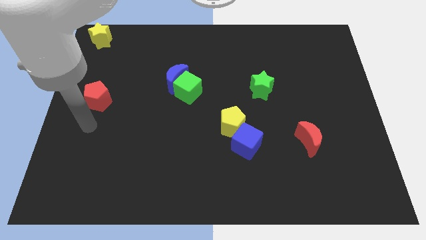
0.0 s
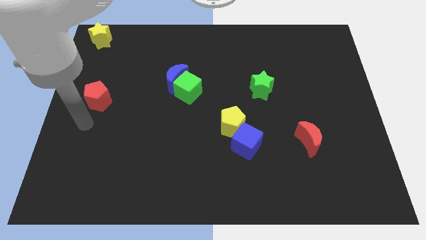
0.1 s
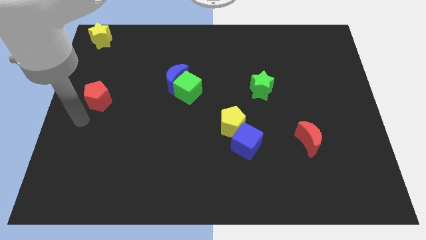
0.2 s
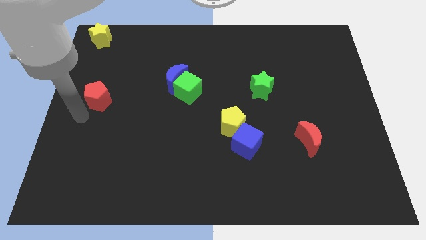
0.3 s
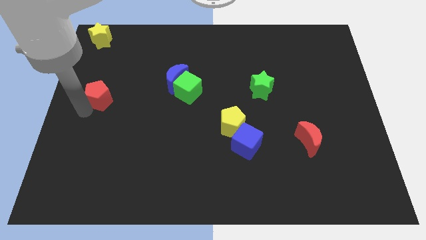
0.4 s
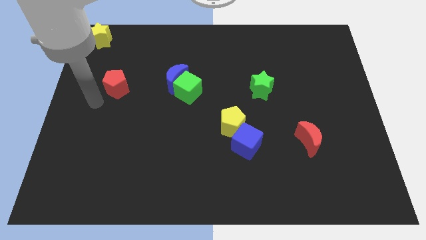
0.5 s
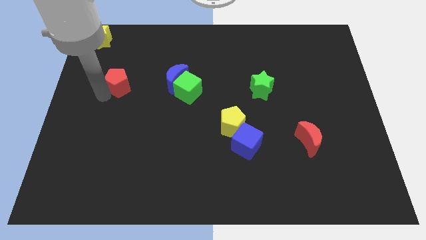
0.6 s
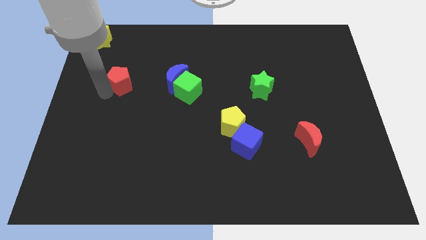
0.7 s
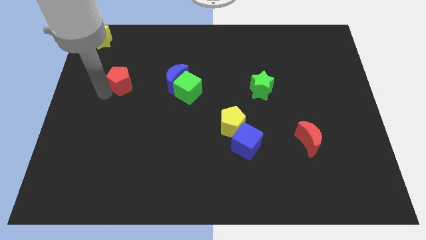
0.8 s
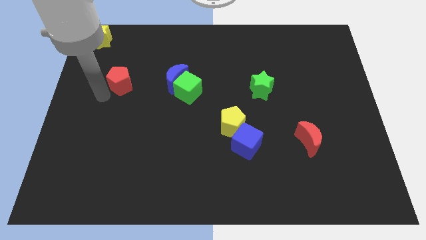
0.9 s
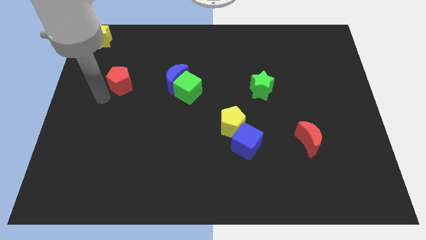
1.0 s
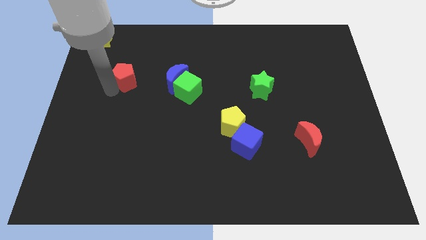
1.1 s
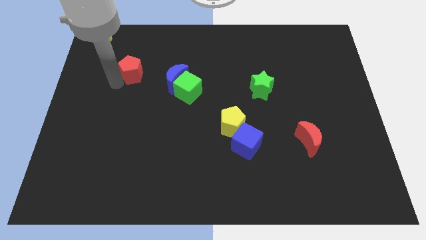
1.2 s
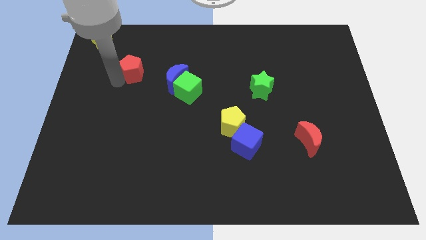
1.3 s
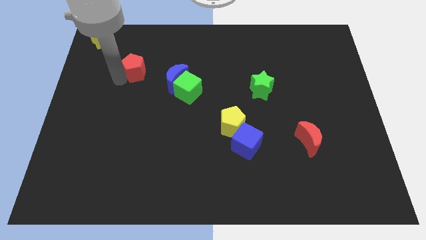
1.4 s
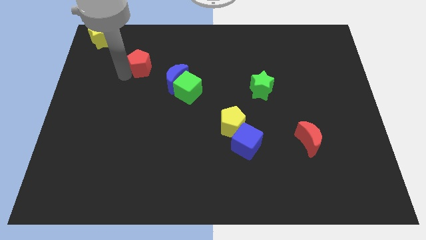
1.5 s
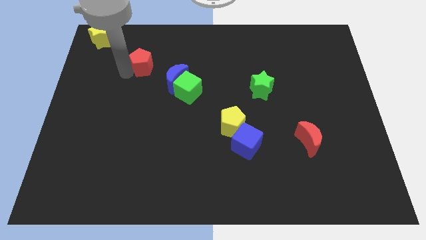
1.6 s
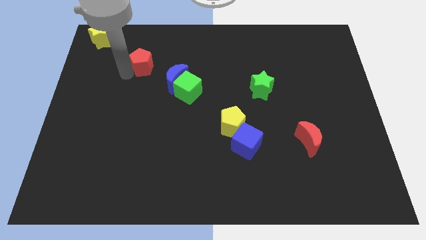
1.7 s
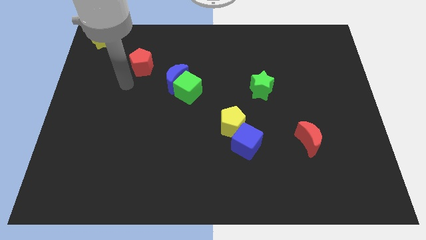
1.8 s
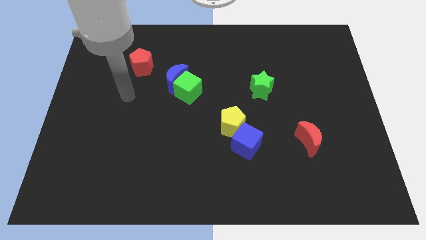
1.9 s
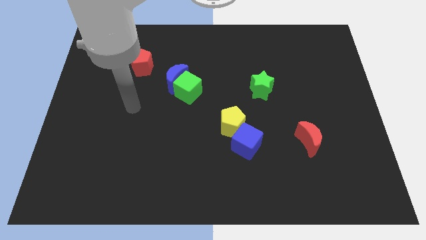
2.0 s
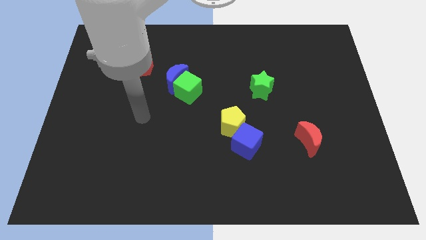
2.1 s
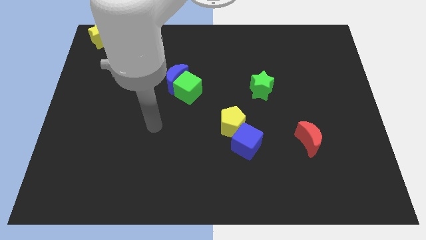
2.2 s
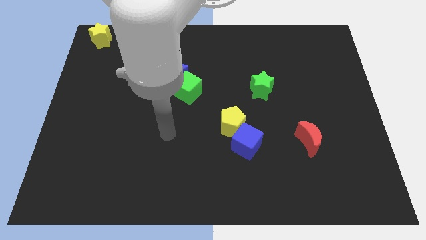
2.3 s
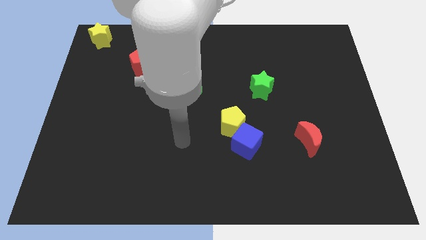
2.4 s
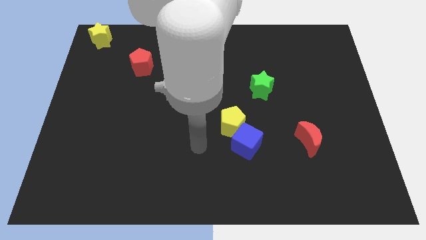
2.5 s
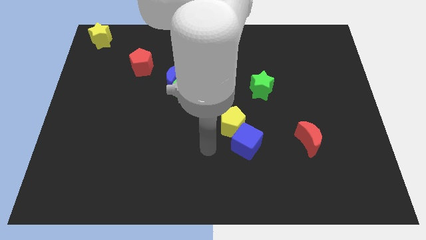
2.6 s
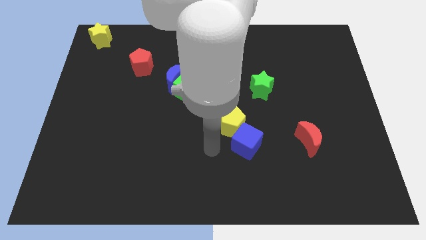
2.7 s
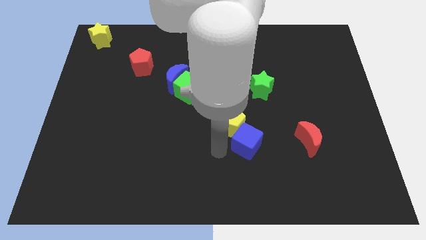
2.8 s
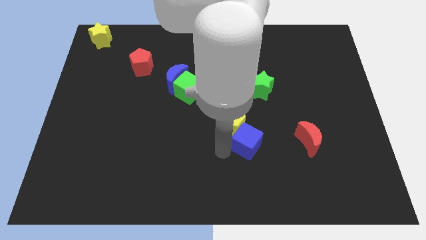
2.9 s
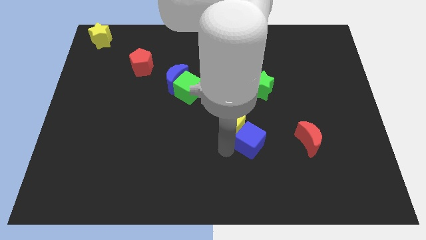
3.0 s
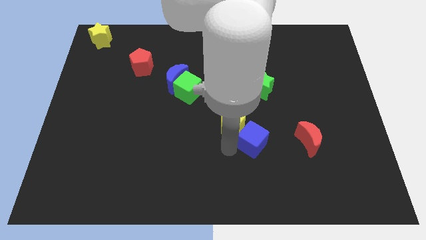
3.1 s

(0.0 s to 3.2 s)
drag the red pentagon diagonally top left to the blue moon

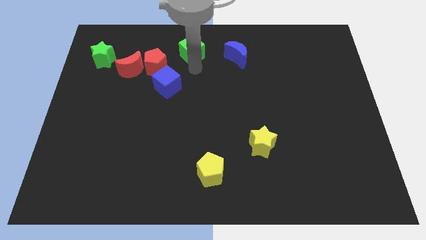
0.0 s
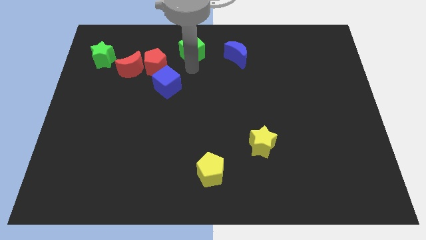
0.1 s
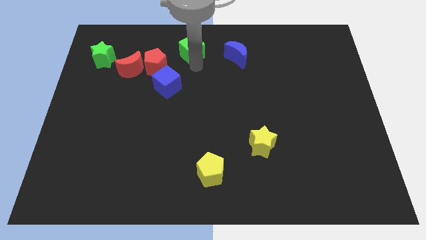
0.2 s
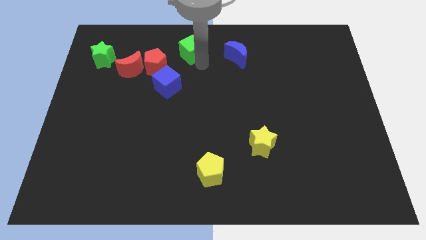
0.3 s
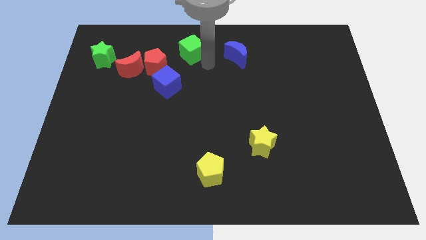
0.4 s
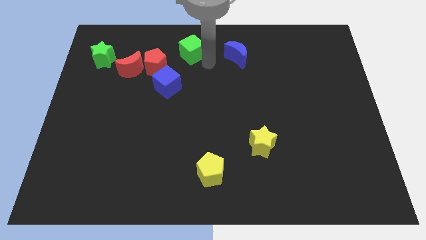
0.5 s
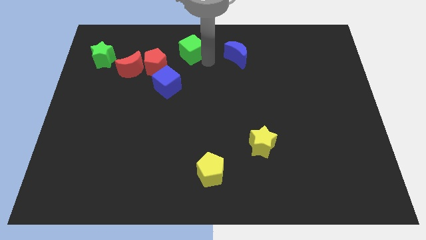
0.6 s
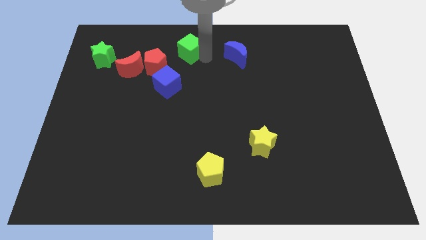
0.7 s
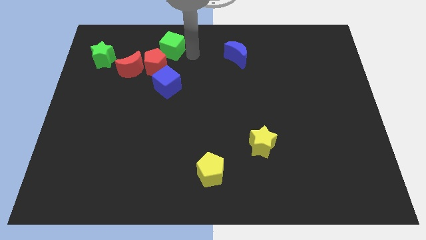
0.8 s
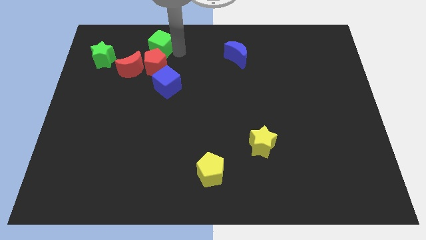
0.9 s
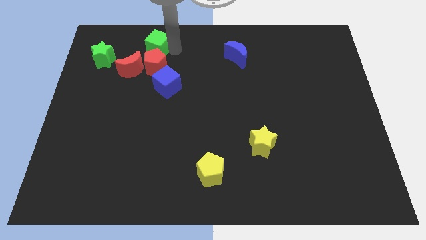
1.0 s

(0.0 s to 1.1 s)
put the green cube above the red pentagon

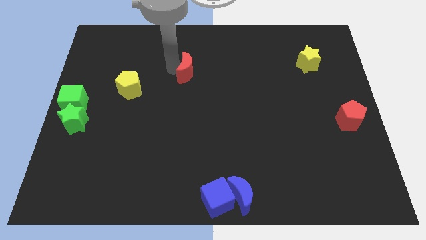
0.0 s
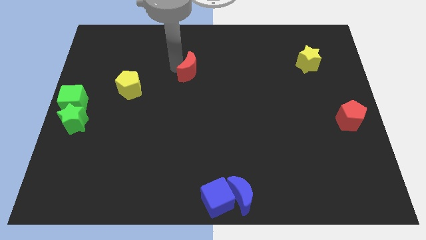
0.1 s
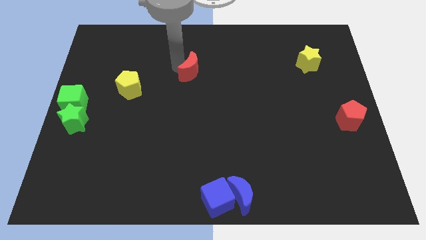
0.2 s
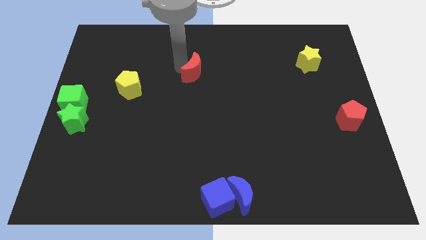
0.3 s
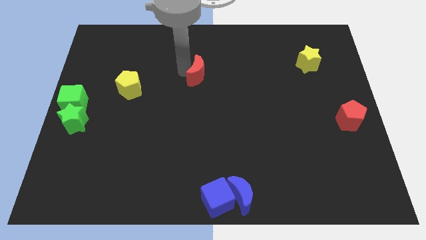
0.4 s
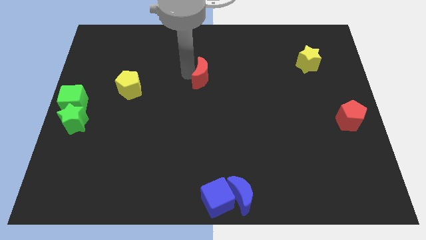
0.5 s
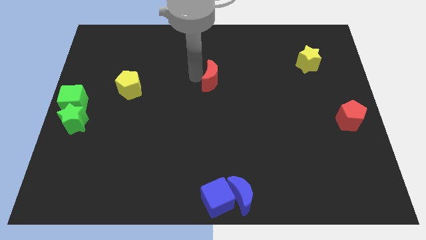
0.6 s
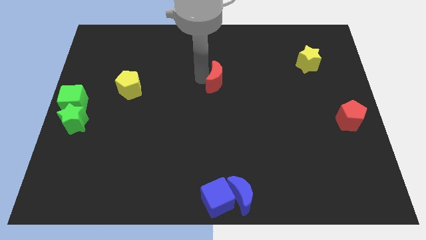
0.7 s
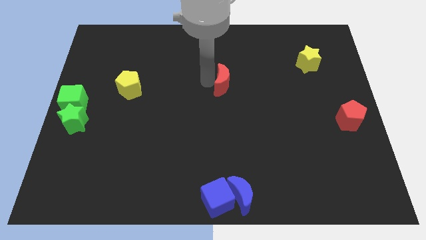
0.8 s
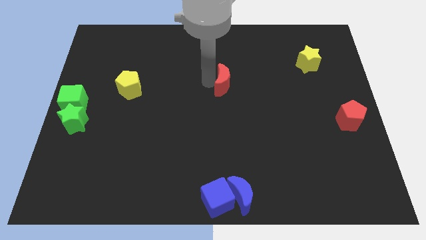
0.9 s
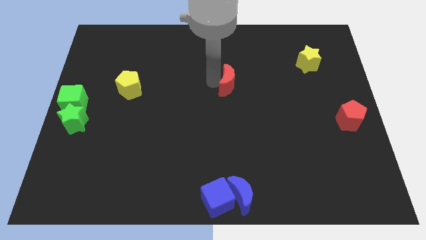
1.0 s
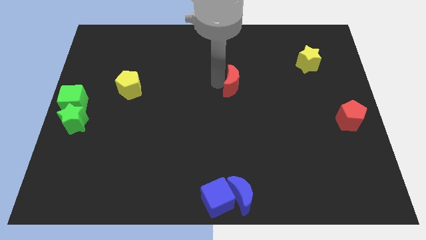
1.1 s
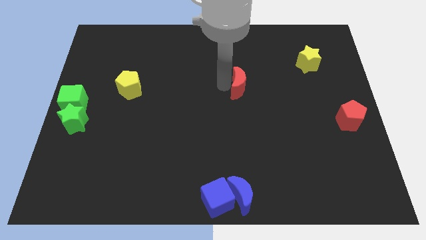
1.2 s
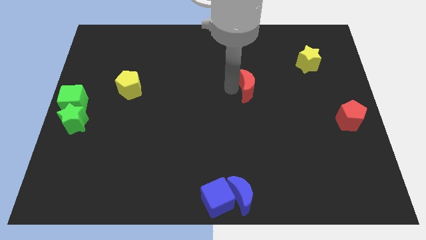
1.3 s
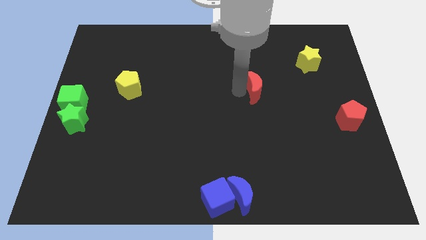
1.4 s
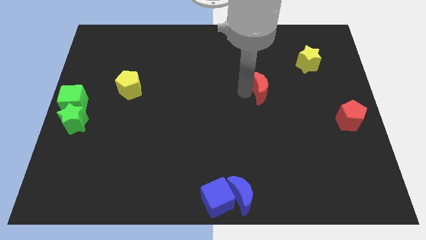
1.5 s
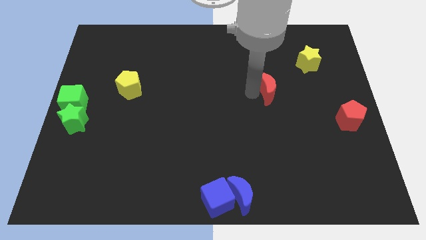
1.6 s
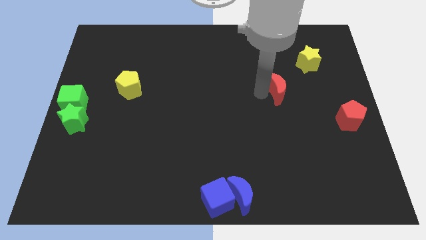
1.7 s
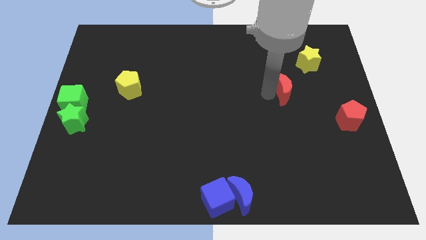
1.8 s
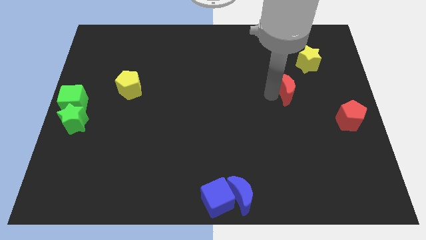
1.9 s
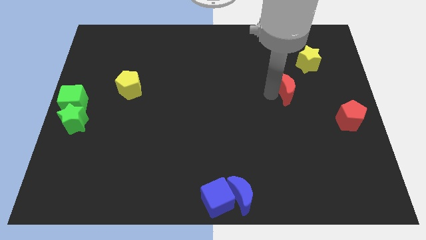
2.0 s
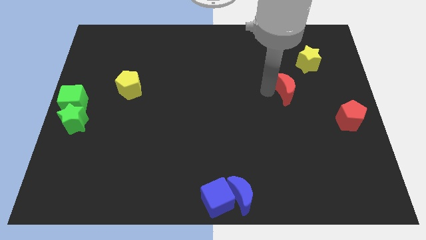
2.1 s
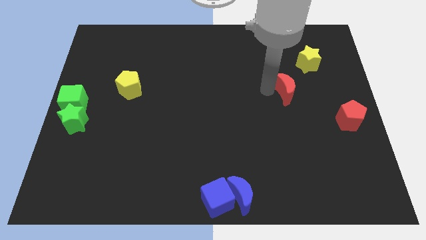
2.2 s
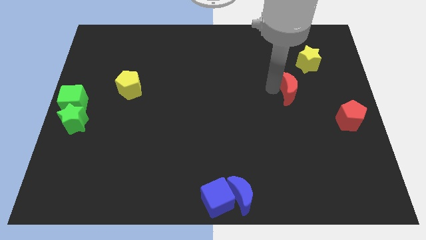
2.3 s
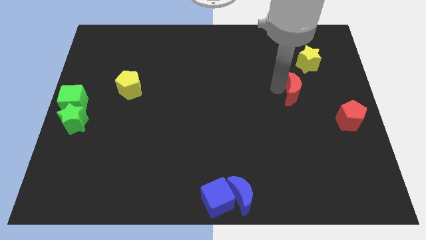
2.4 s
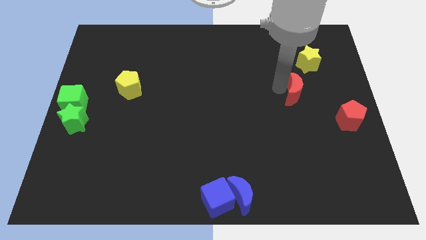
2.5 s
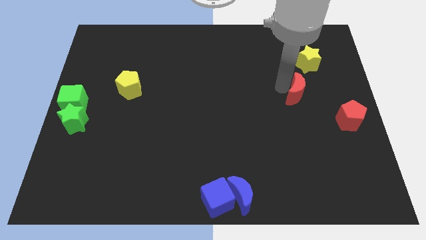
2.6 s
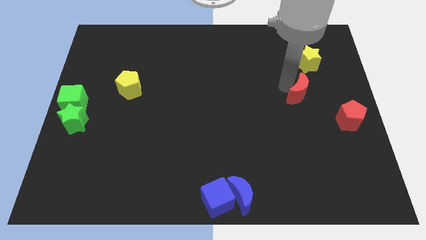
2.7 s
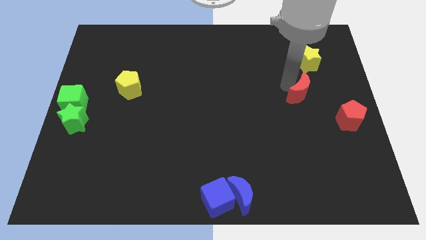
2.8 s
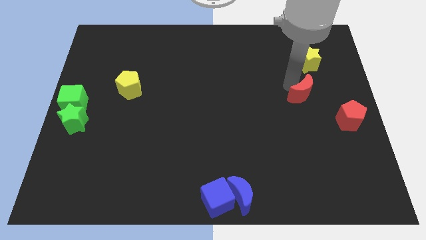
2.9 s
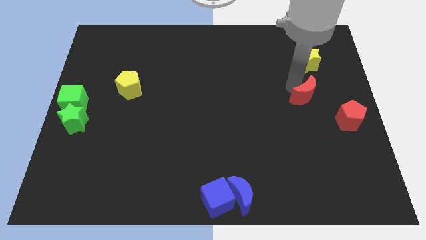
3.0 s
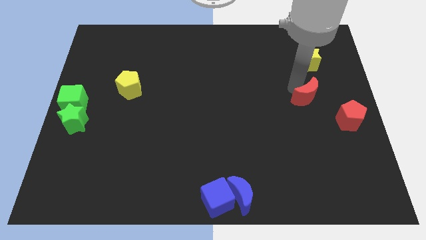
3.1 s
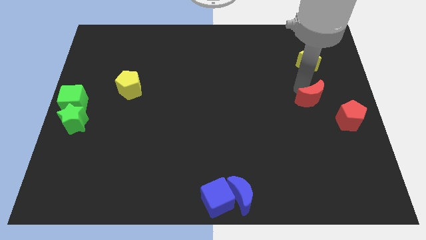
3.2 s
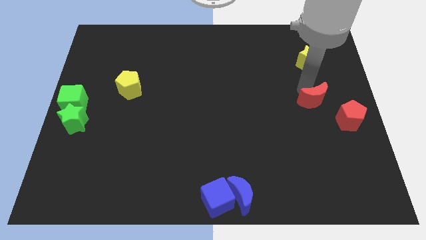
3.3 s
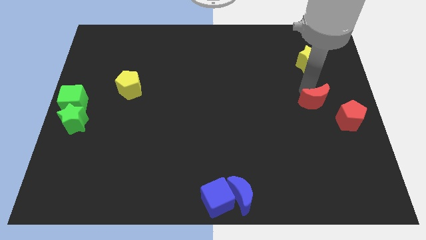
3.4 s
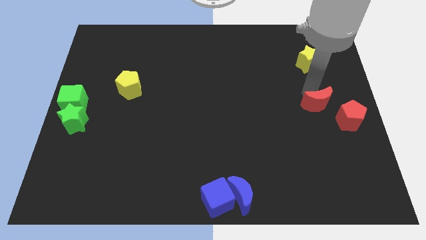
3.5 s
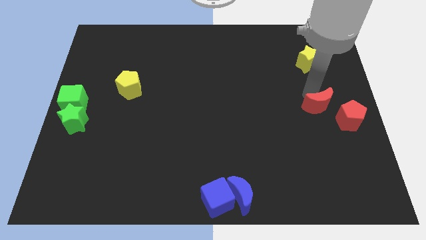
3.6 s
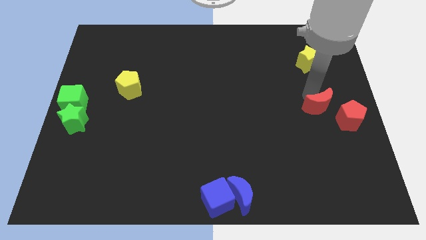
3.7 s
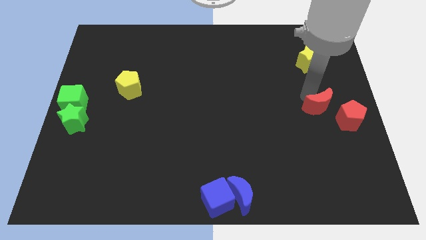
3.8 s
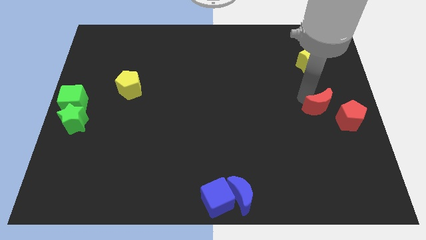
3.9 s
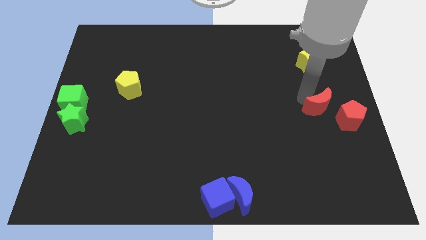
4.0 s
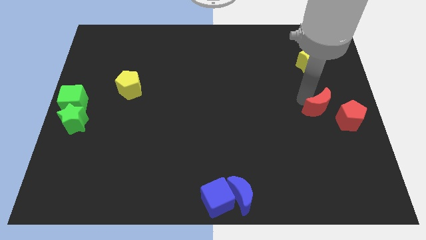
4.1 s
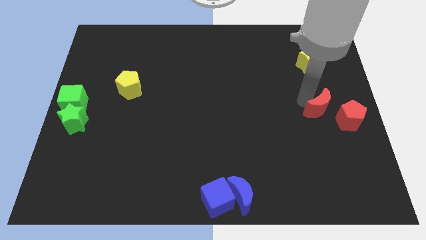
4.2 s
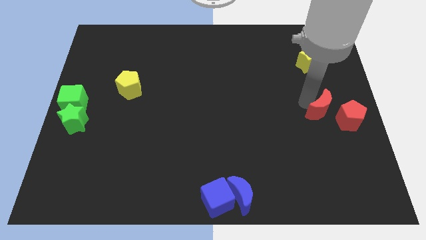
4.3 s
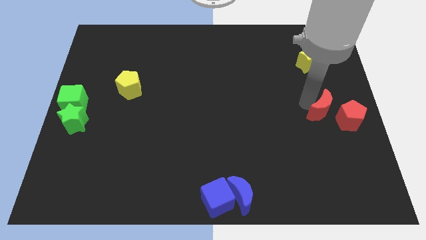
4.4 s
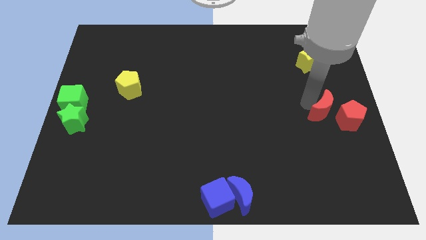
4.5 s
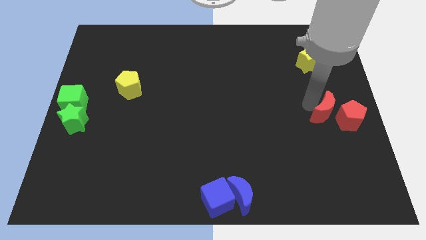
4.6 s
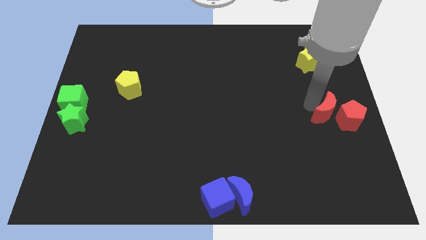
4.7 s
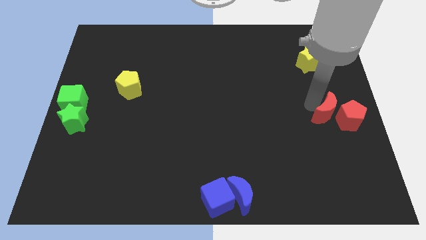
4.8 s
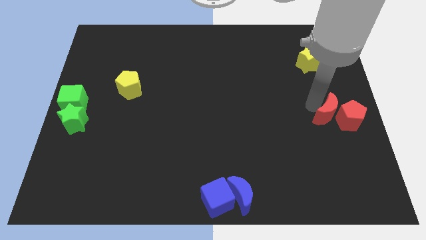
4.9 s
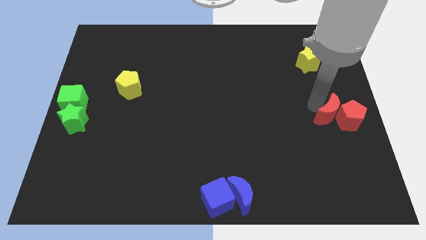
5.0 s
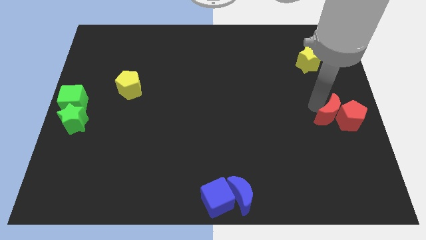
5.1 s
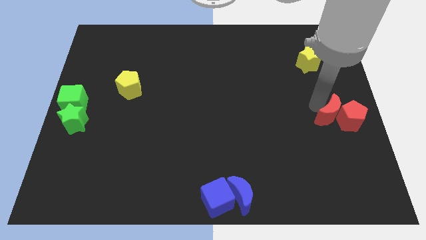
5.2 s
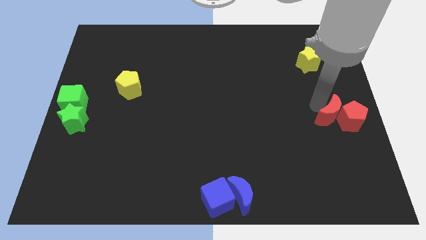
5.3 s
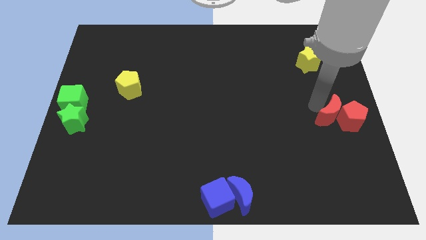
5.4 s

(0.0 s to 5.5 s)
place red crescent on the left side of the red pentagon
